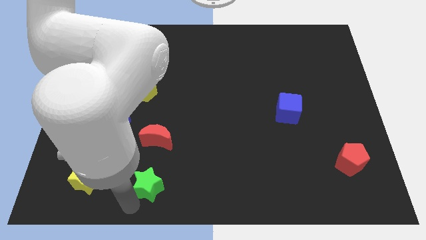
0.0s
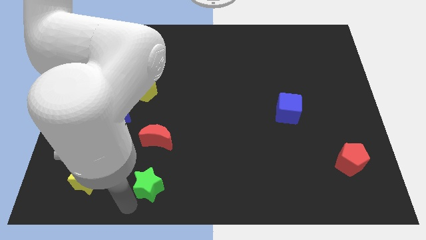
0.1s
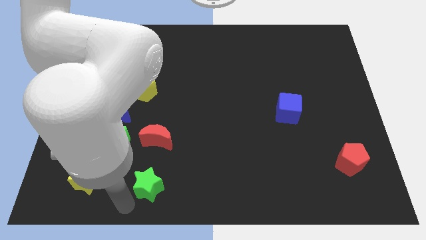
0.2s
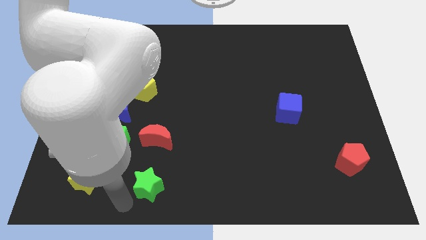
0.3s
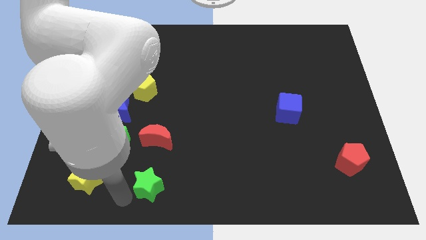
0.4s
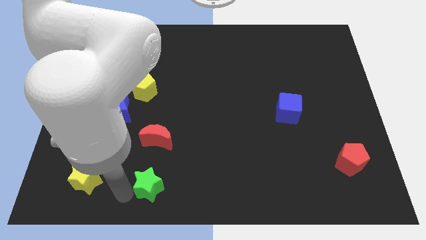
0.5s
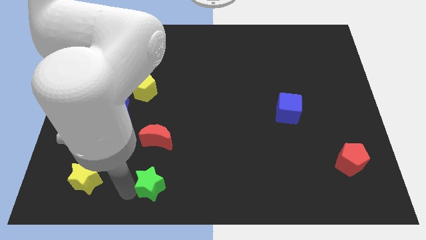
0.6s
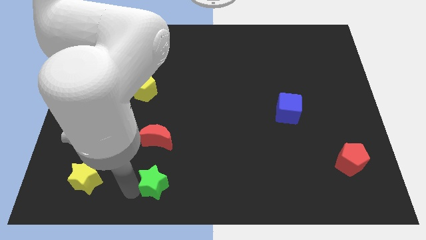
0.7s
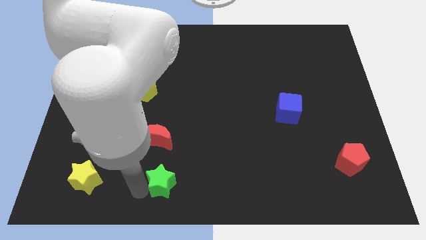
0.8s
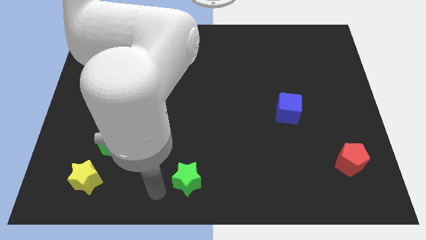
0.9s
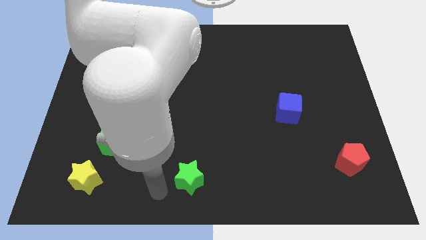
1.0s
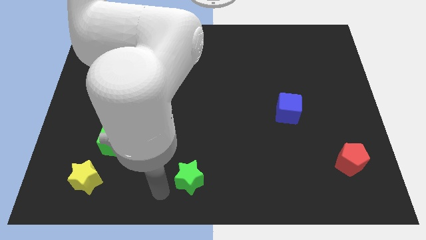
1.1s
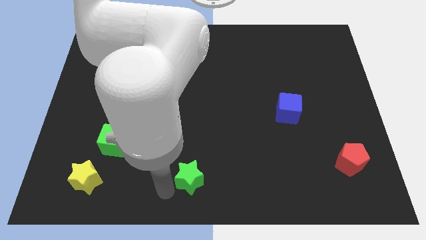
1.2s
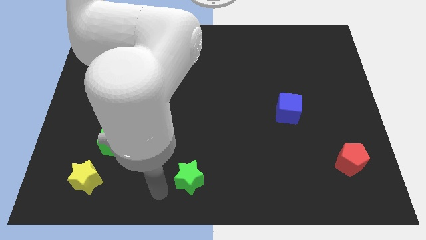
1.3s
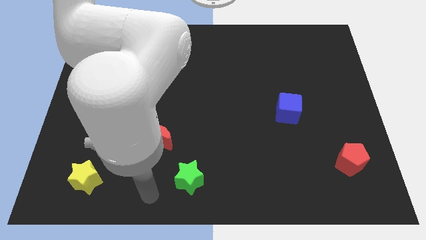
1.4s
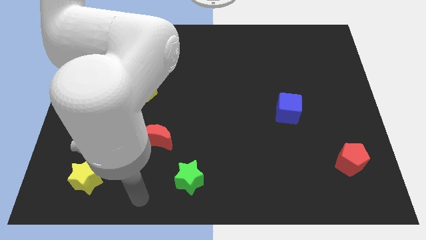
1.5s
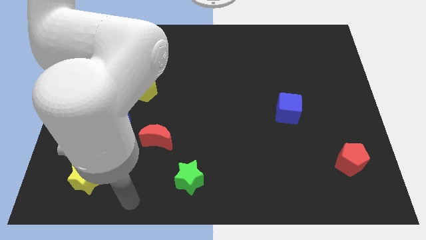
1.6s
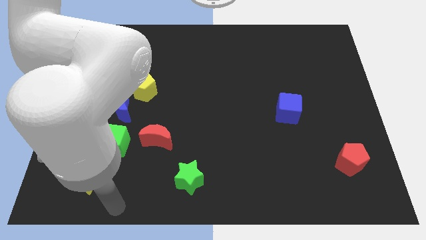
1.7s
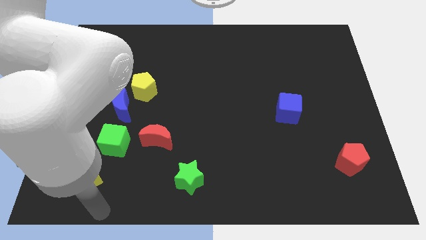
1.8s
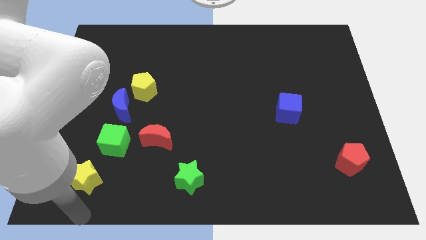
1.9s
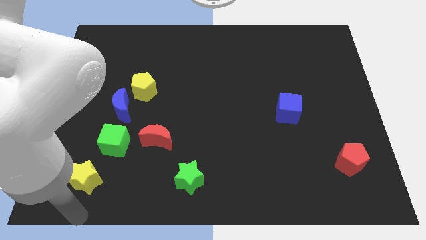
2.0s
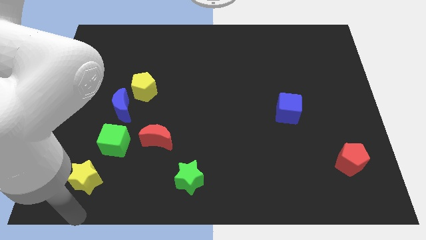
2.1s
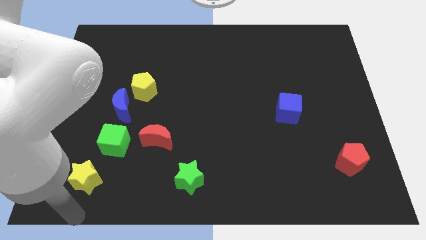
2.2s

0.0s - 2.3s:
push the green star to the right of the board

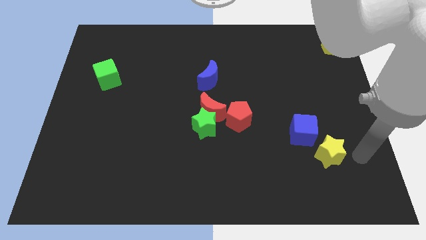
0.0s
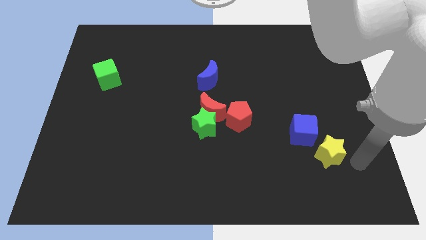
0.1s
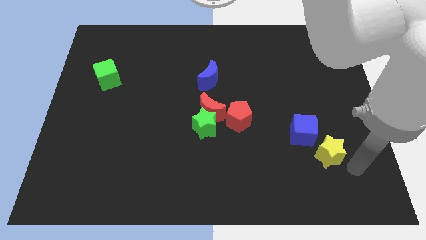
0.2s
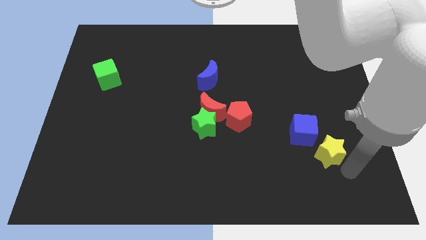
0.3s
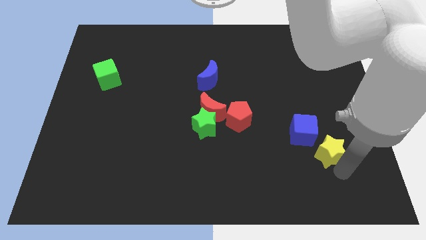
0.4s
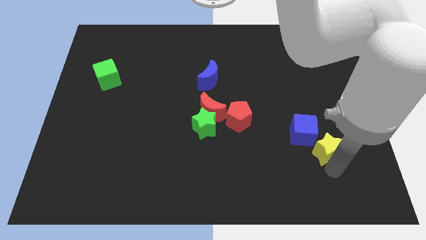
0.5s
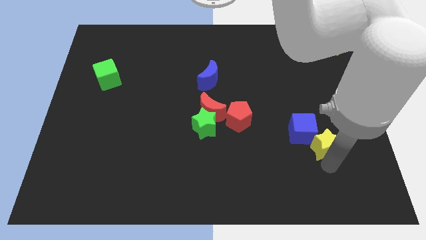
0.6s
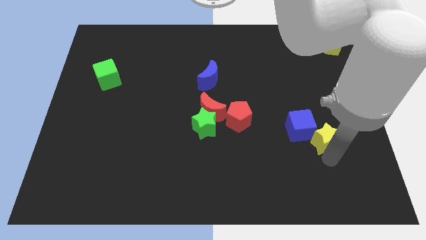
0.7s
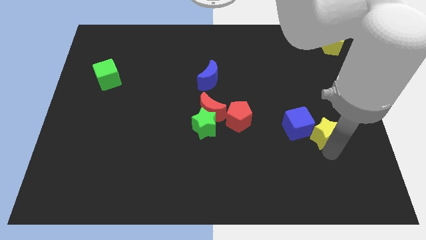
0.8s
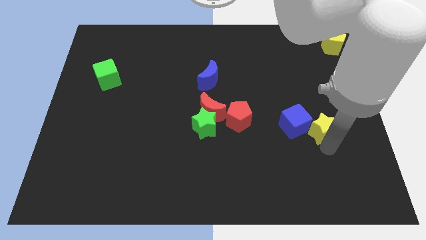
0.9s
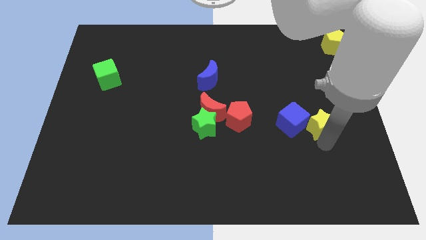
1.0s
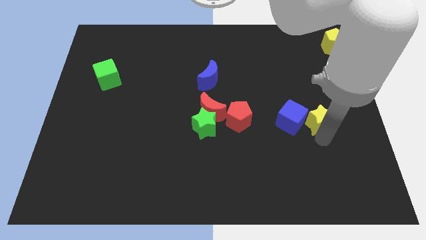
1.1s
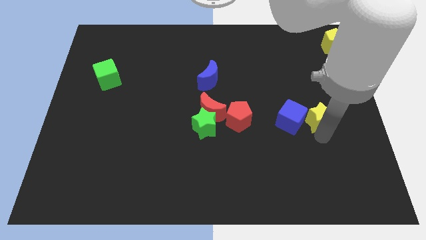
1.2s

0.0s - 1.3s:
push the blue cube and the yellow star toward the top side diagonally on the left side

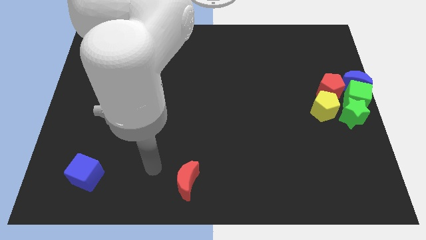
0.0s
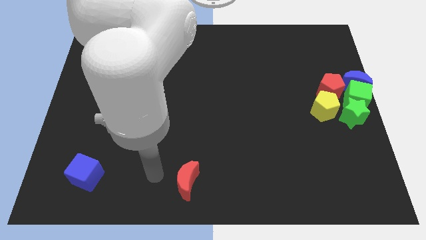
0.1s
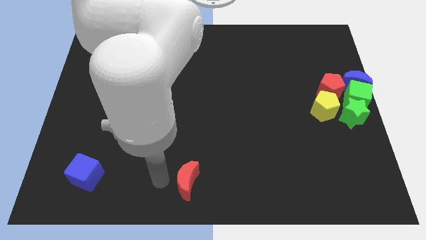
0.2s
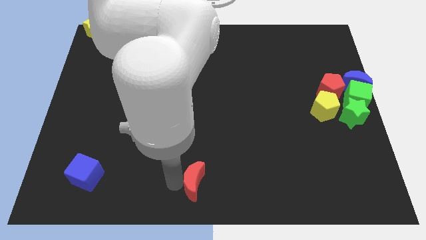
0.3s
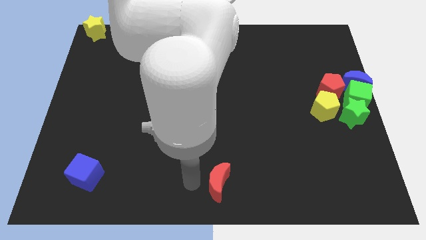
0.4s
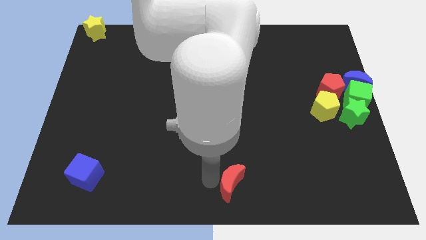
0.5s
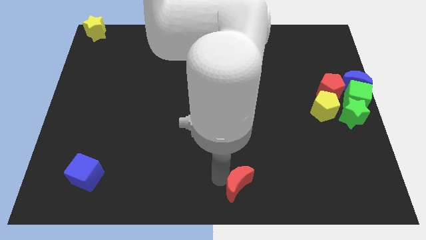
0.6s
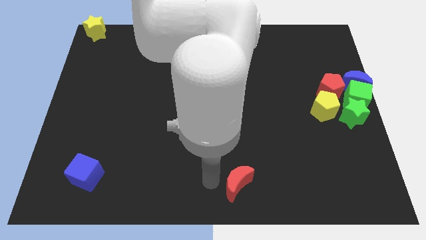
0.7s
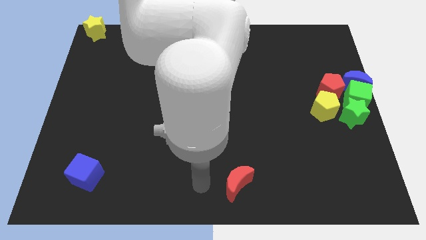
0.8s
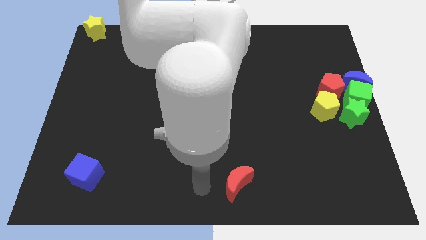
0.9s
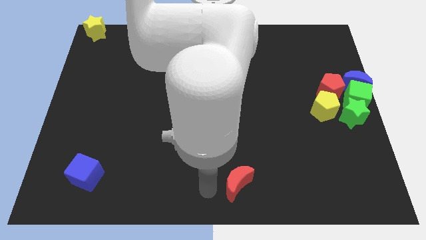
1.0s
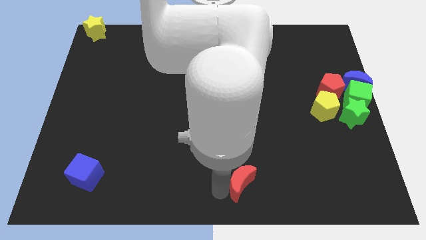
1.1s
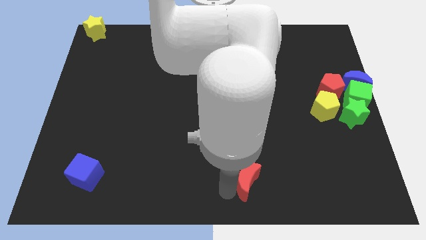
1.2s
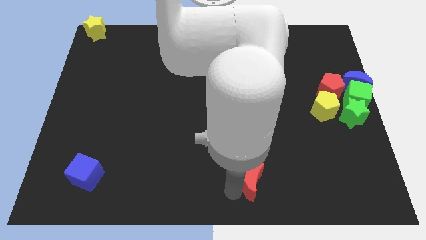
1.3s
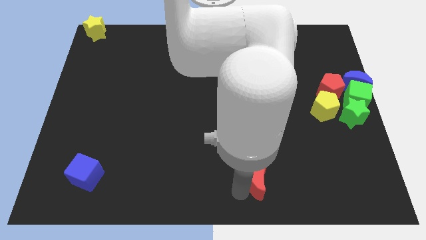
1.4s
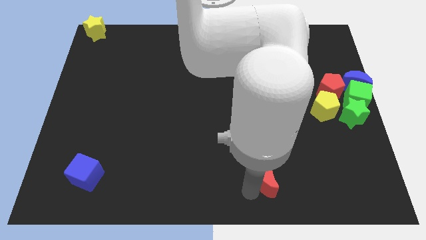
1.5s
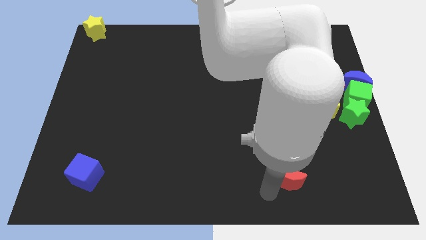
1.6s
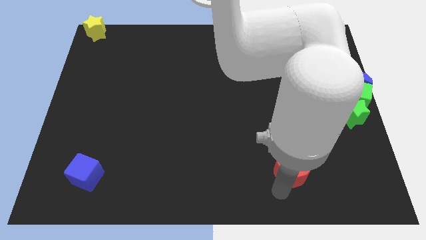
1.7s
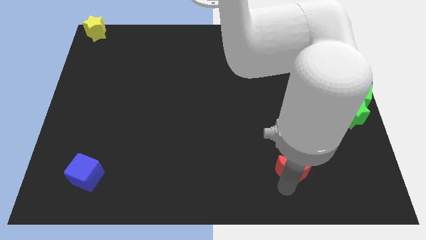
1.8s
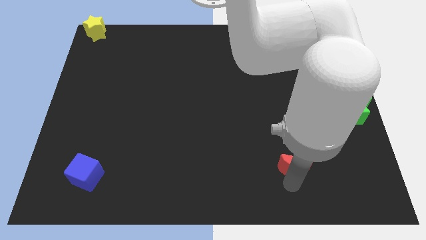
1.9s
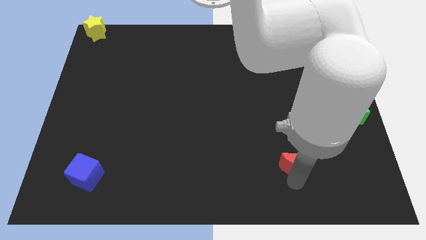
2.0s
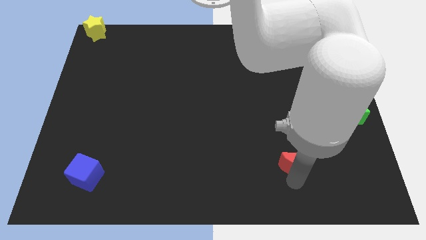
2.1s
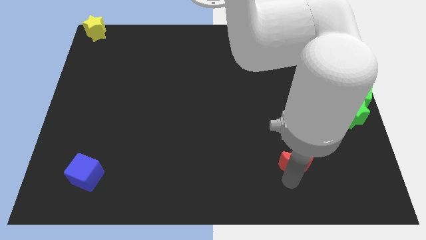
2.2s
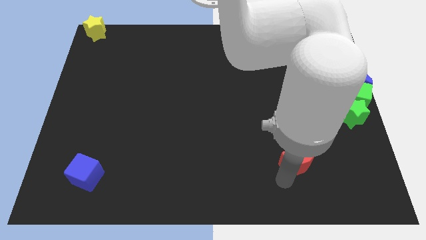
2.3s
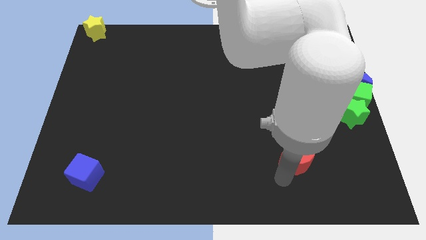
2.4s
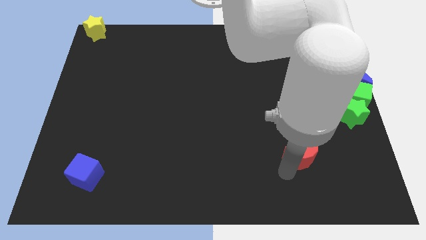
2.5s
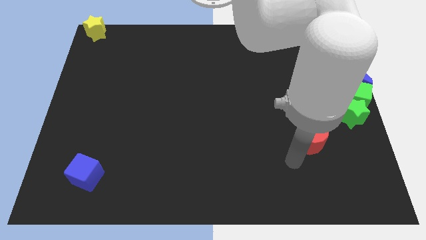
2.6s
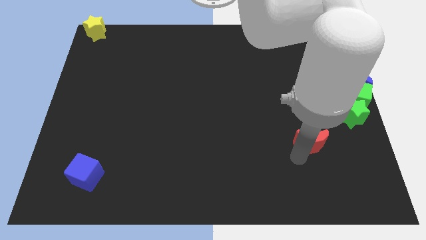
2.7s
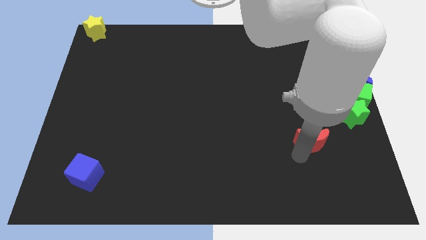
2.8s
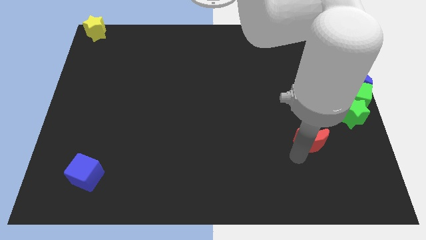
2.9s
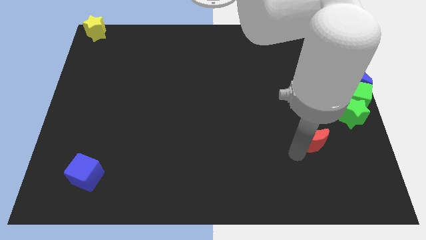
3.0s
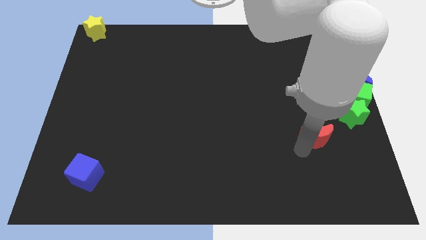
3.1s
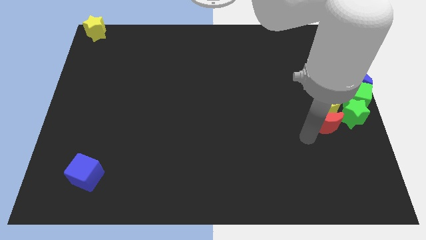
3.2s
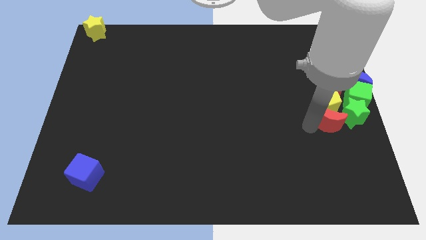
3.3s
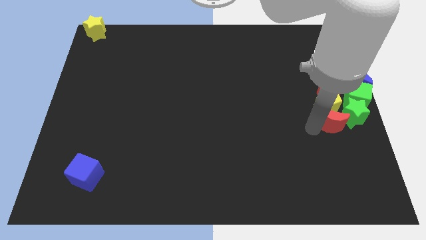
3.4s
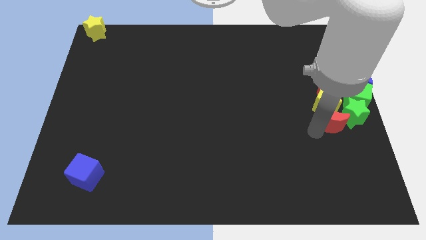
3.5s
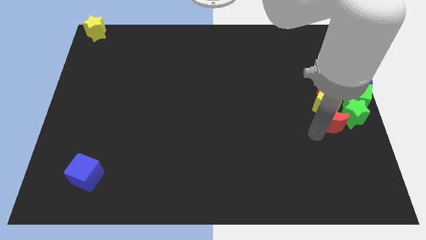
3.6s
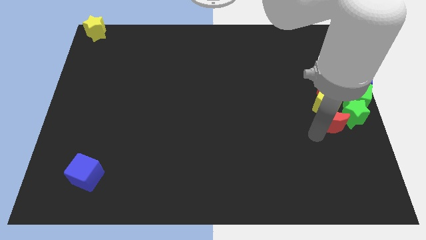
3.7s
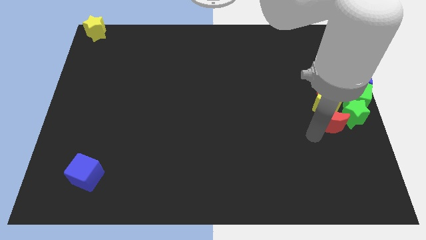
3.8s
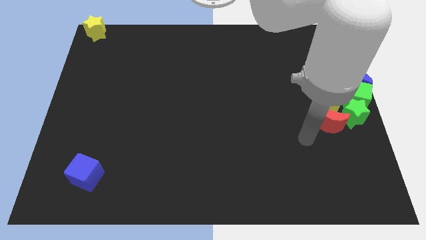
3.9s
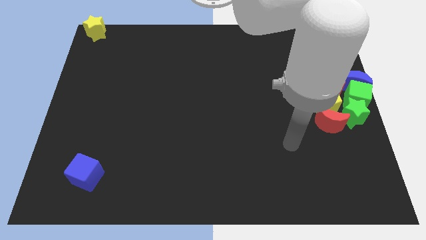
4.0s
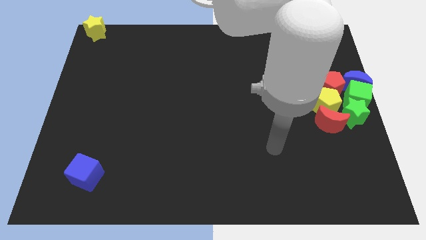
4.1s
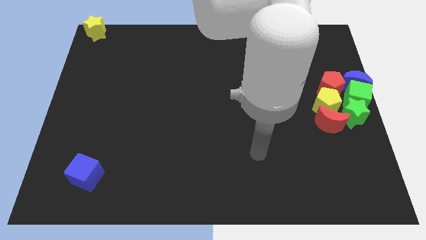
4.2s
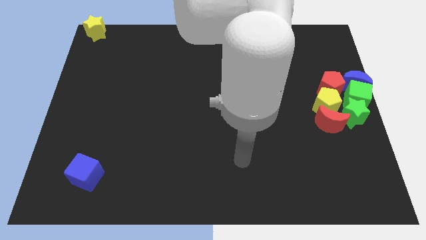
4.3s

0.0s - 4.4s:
push the red crescent to the bottom of the yellow pentagon

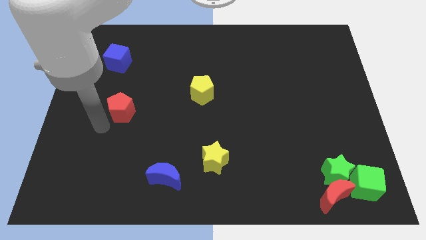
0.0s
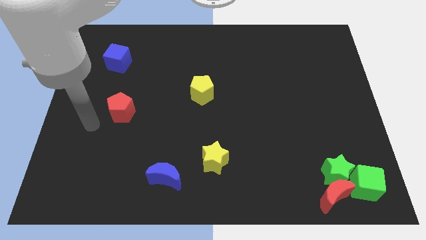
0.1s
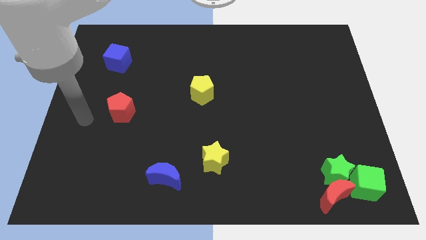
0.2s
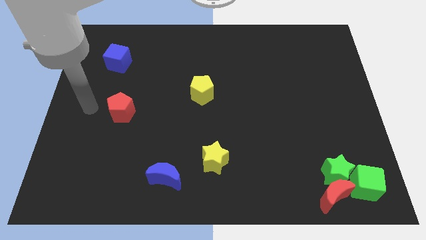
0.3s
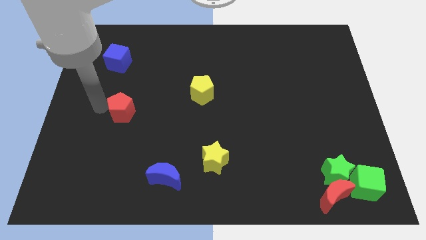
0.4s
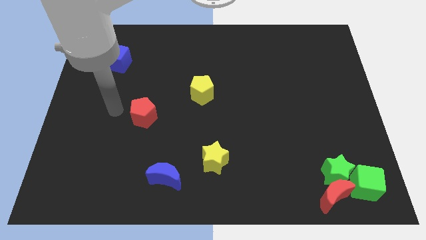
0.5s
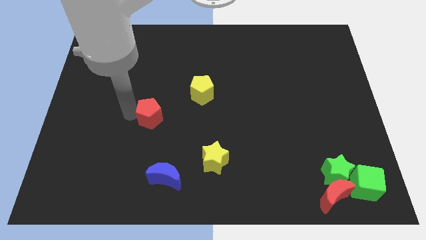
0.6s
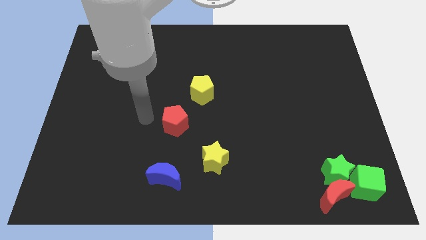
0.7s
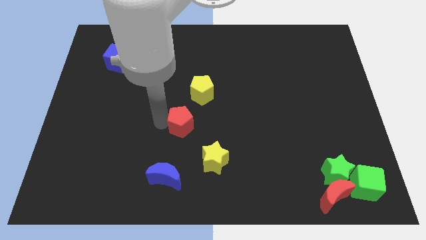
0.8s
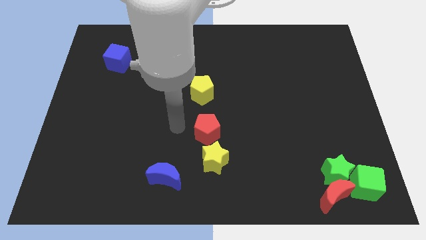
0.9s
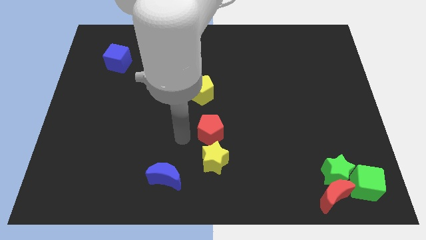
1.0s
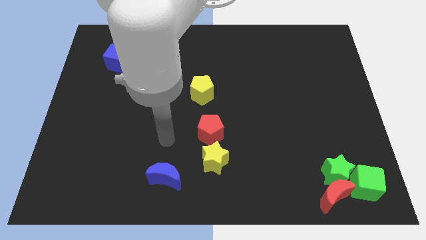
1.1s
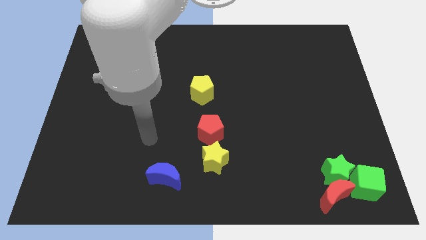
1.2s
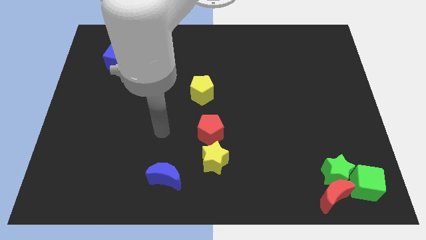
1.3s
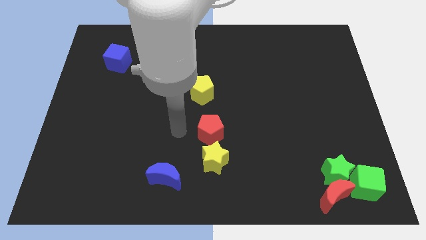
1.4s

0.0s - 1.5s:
place the red pentagon to the top of yellow star
